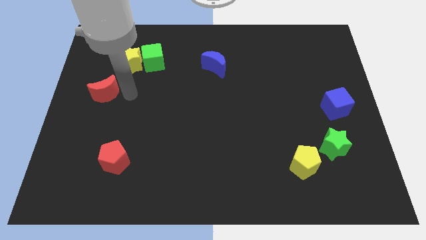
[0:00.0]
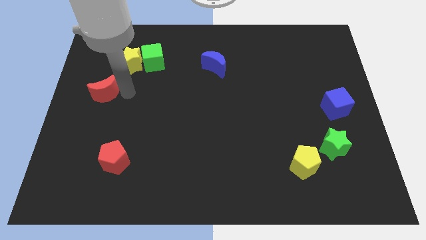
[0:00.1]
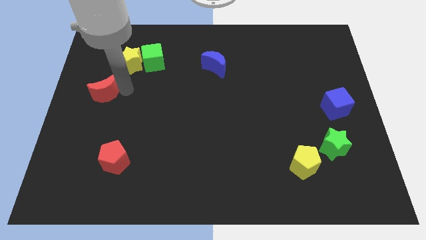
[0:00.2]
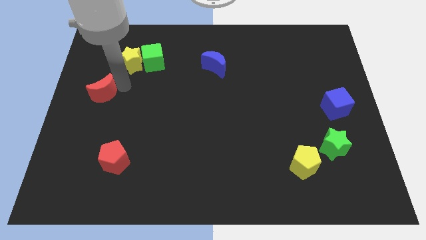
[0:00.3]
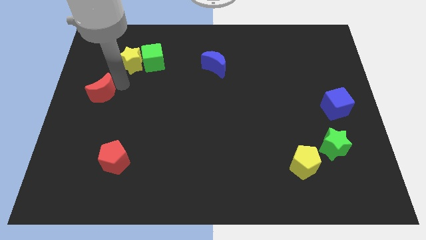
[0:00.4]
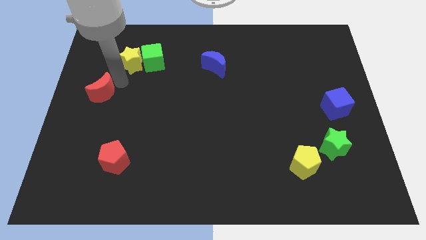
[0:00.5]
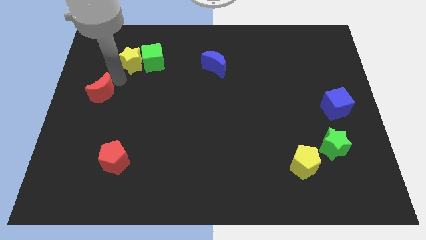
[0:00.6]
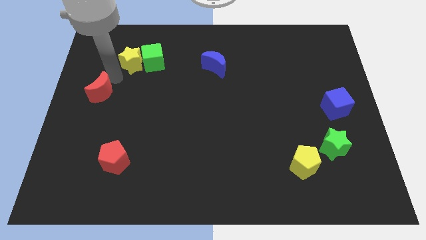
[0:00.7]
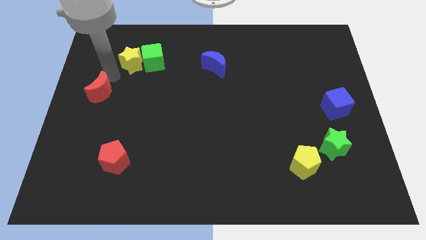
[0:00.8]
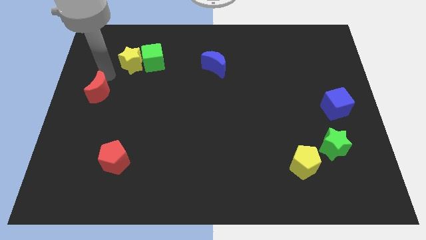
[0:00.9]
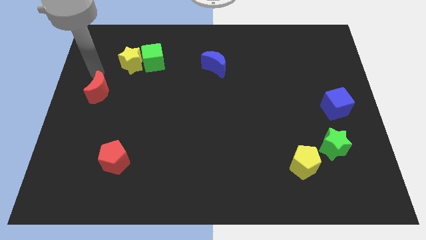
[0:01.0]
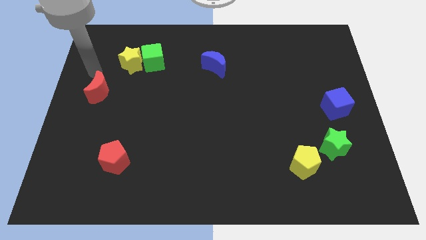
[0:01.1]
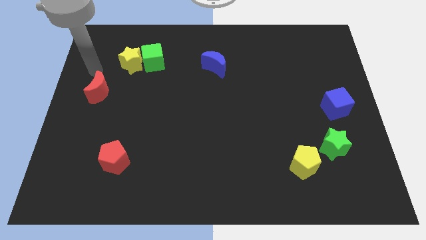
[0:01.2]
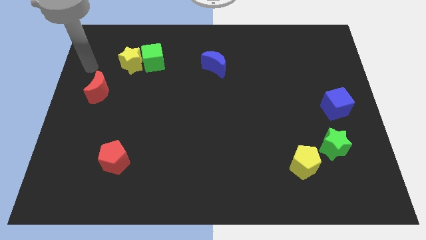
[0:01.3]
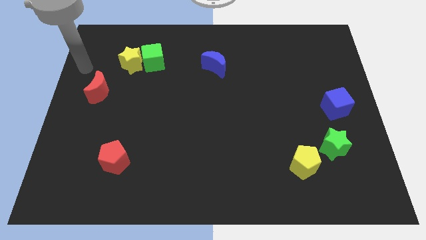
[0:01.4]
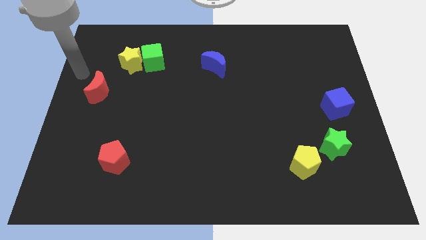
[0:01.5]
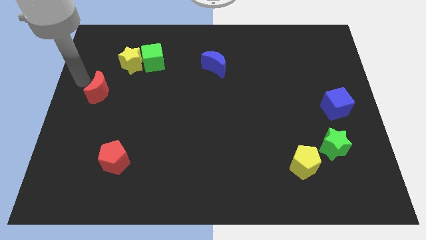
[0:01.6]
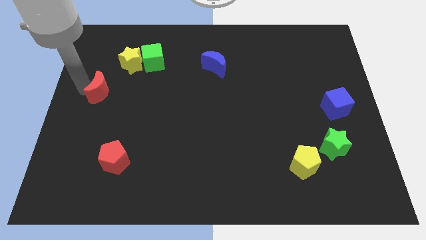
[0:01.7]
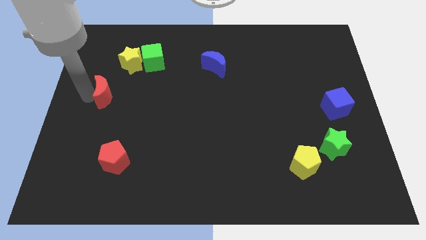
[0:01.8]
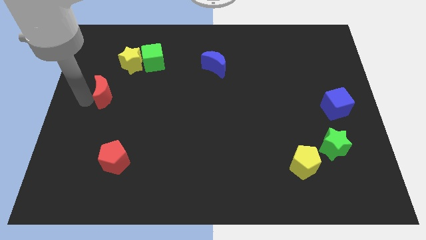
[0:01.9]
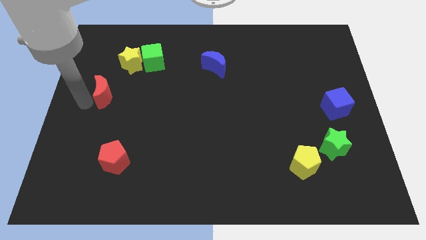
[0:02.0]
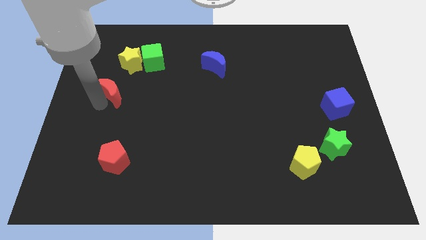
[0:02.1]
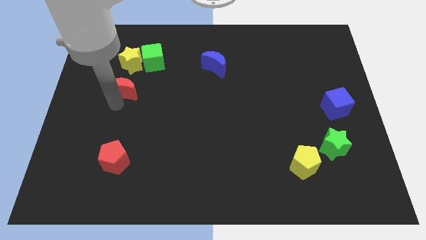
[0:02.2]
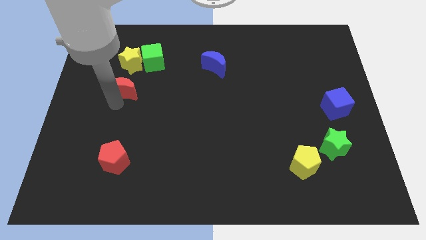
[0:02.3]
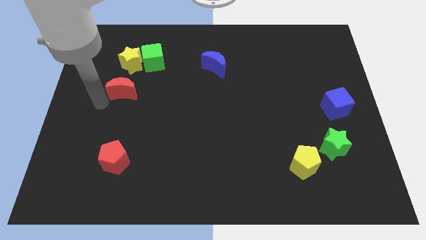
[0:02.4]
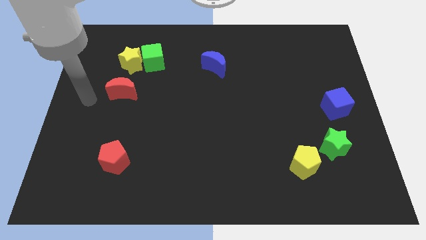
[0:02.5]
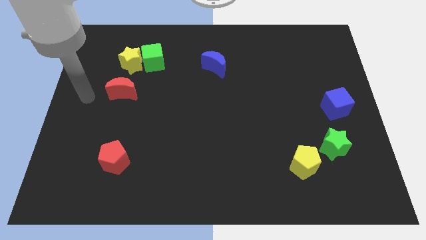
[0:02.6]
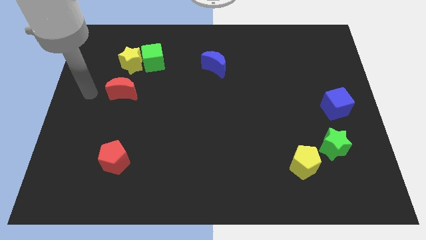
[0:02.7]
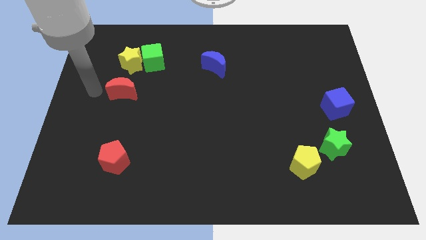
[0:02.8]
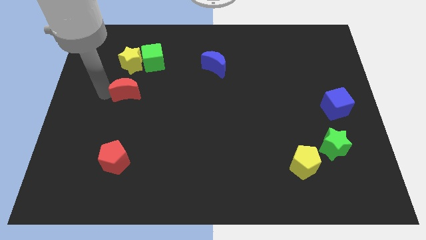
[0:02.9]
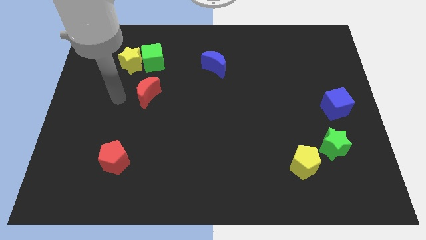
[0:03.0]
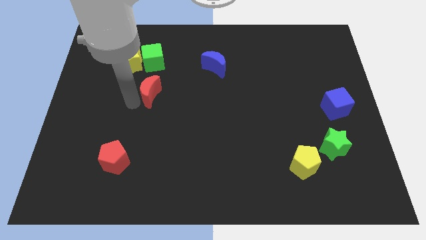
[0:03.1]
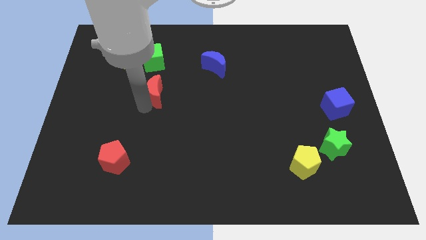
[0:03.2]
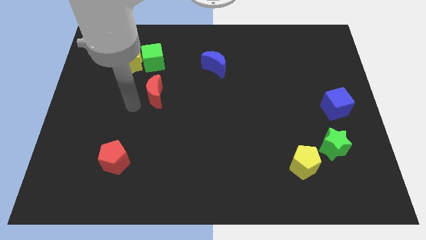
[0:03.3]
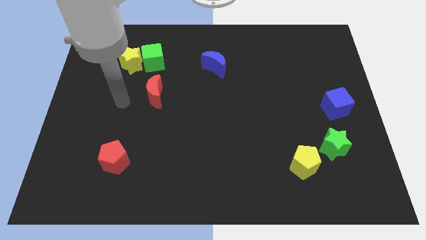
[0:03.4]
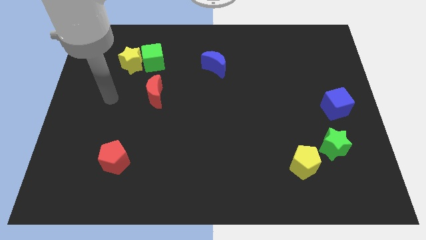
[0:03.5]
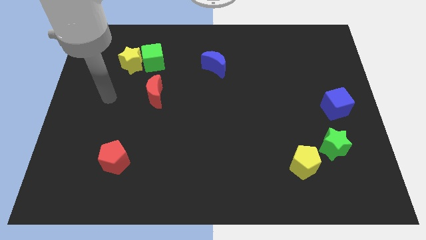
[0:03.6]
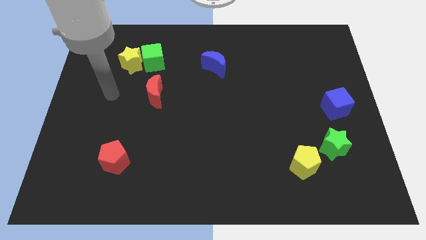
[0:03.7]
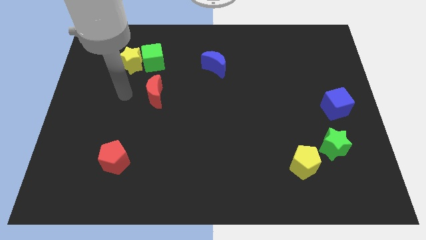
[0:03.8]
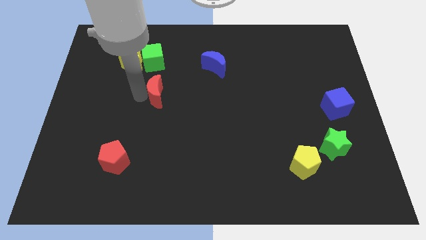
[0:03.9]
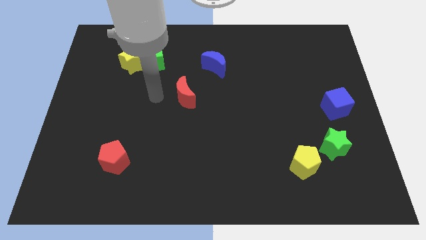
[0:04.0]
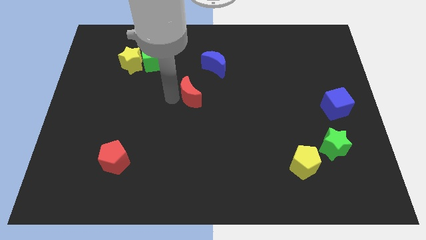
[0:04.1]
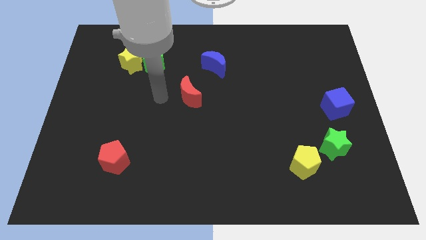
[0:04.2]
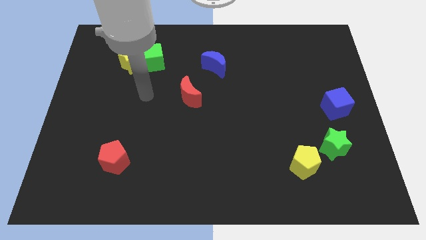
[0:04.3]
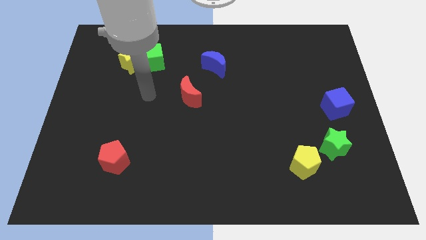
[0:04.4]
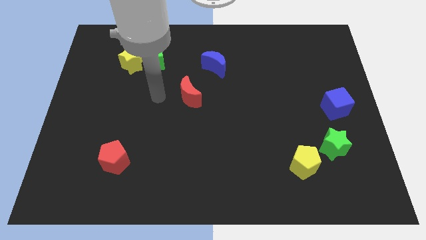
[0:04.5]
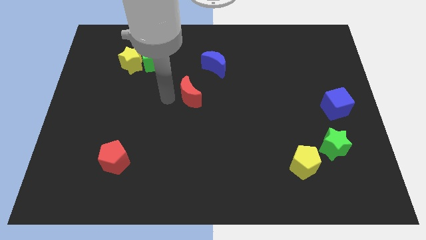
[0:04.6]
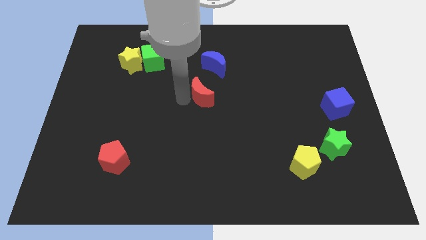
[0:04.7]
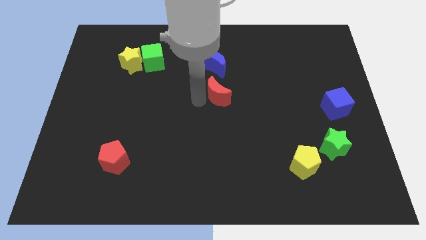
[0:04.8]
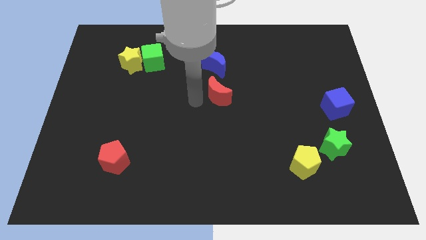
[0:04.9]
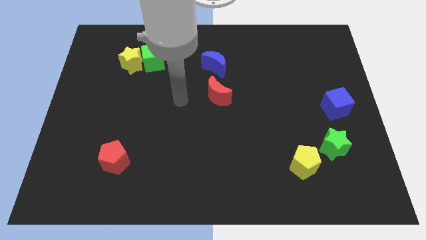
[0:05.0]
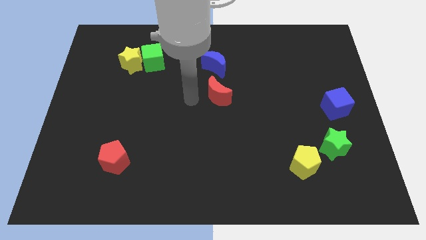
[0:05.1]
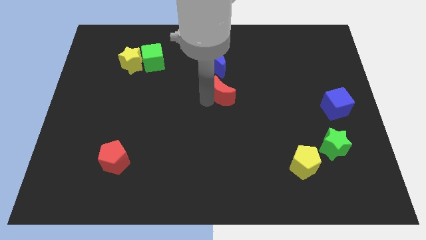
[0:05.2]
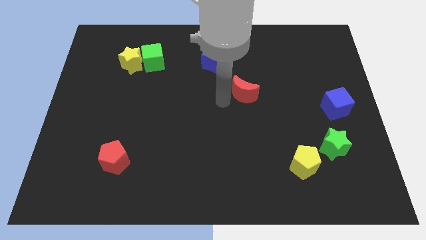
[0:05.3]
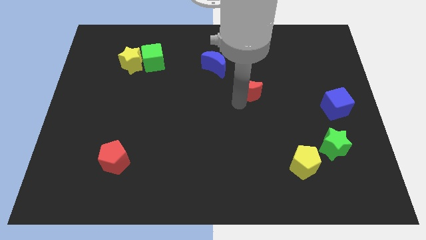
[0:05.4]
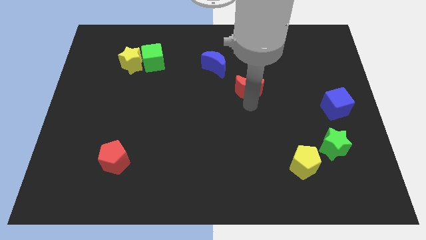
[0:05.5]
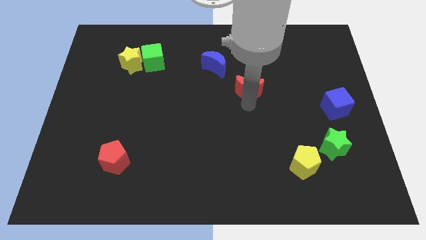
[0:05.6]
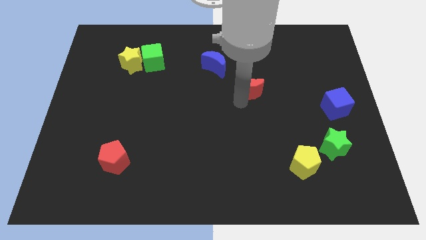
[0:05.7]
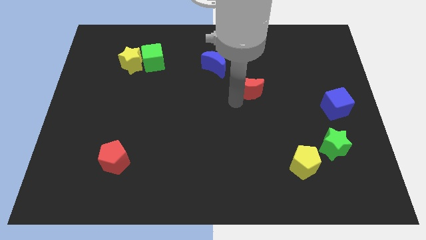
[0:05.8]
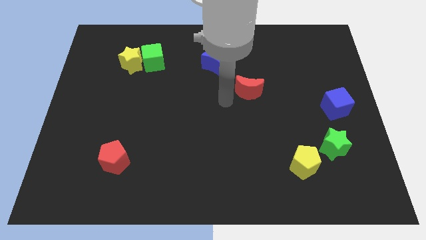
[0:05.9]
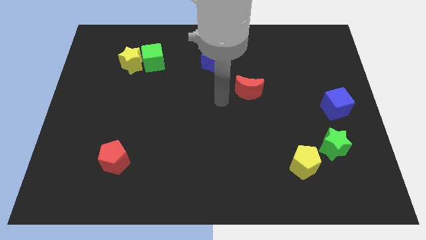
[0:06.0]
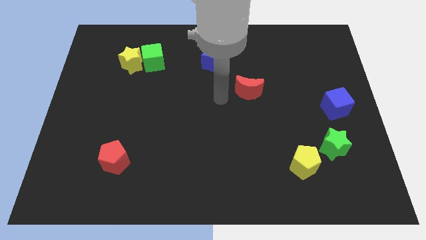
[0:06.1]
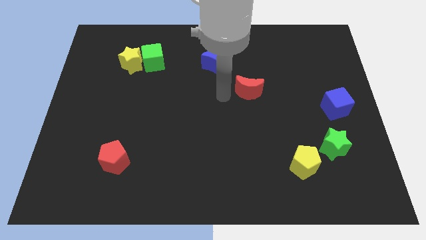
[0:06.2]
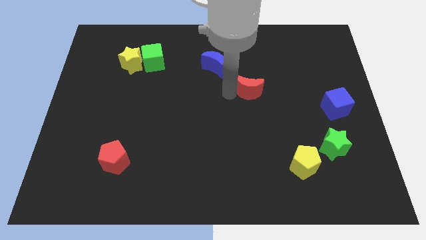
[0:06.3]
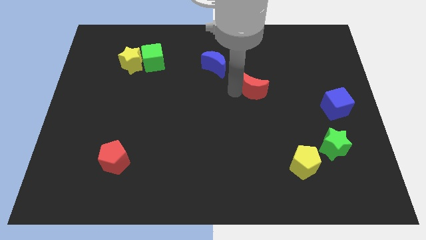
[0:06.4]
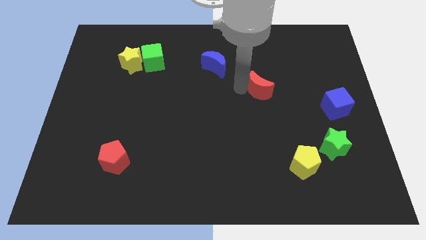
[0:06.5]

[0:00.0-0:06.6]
push the red crescent to the right side of the table

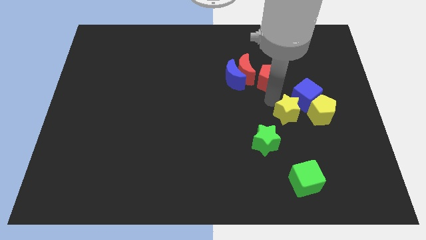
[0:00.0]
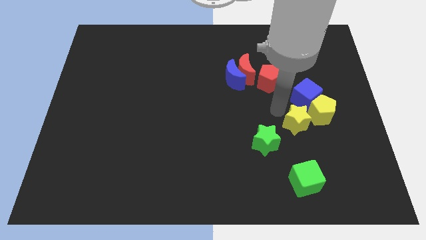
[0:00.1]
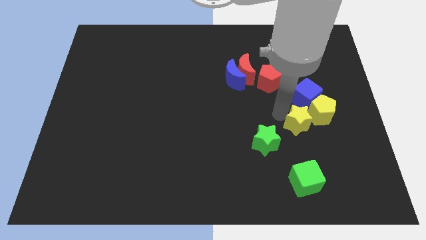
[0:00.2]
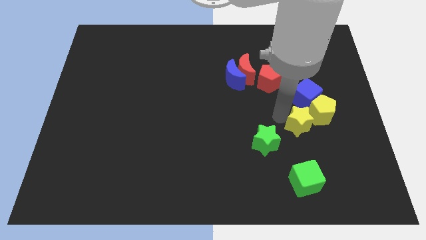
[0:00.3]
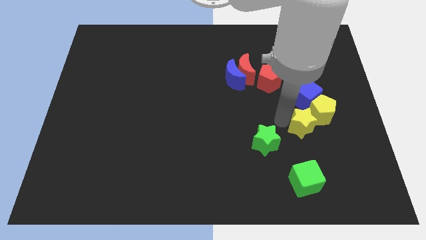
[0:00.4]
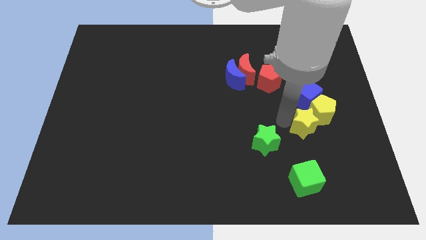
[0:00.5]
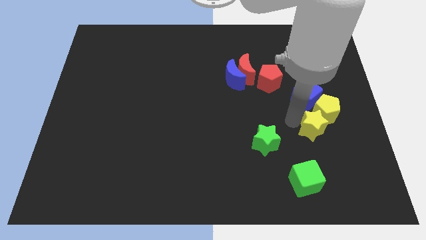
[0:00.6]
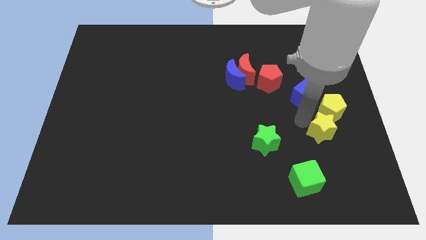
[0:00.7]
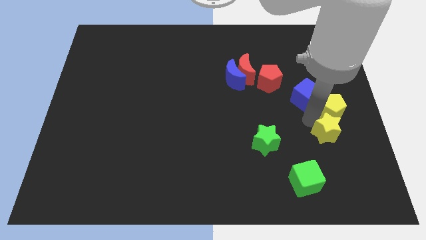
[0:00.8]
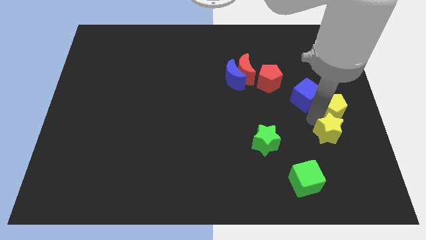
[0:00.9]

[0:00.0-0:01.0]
push the yellow star into yellow pentagon

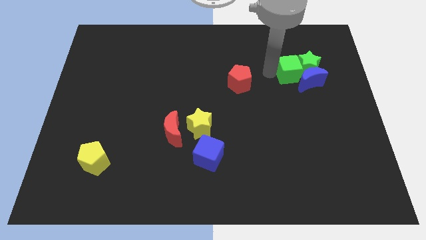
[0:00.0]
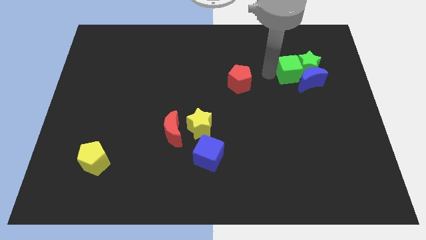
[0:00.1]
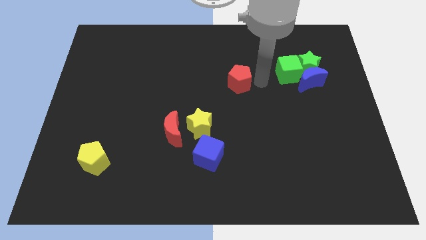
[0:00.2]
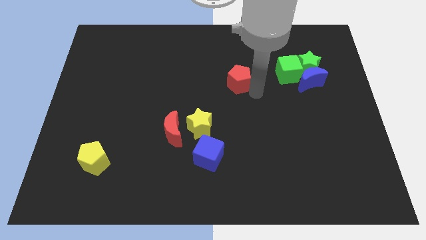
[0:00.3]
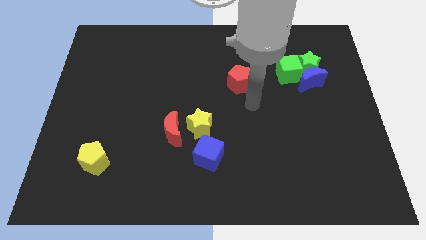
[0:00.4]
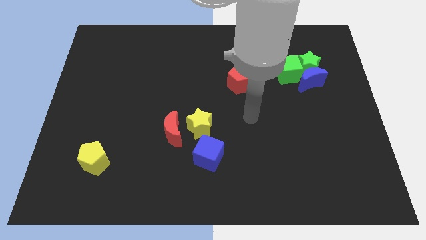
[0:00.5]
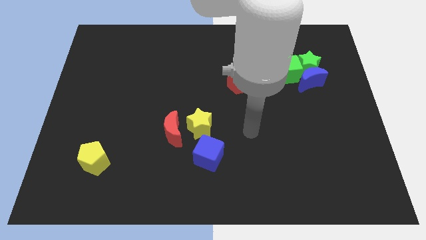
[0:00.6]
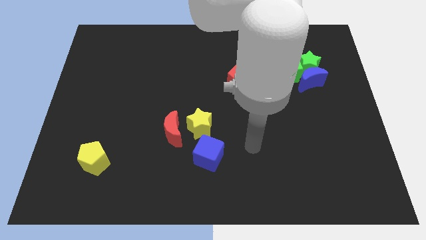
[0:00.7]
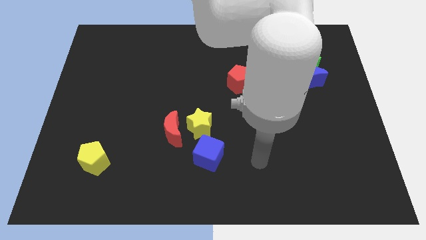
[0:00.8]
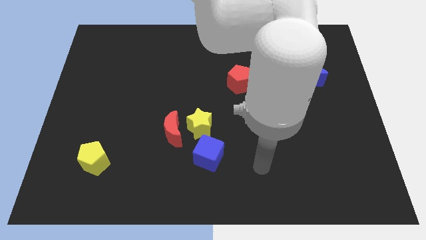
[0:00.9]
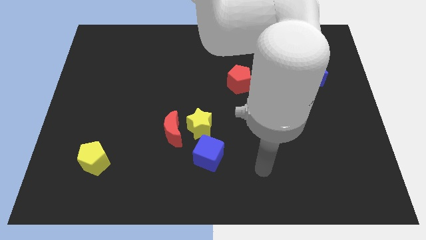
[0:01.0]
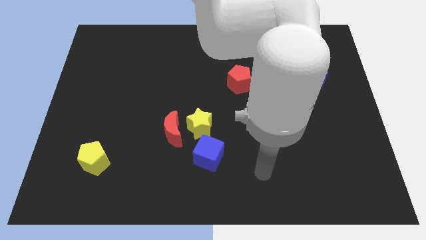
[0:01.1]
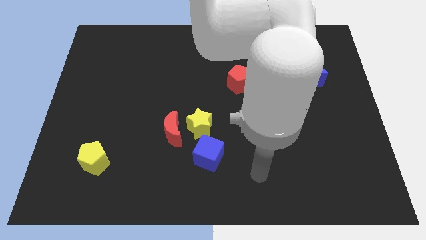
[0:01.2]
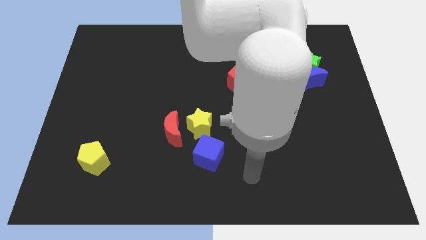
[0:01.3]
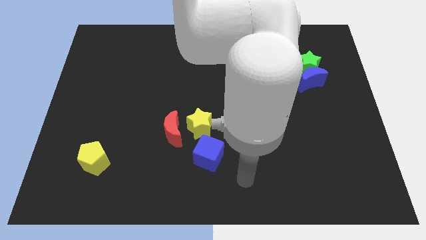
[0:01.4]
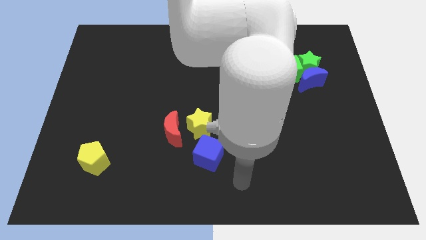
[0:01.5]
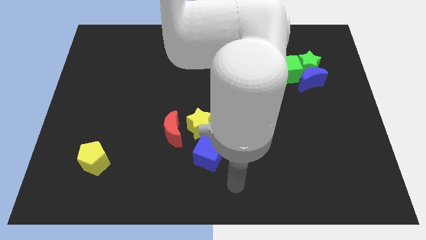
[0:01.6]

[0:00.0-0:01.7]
move your arm to the bottom right of the blue cube
